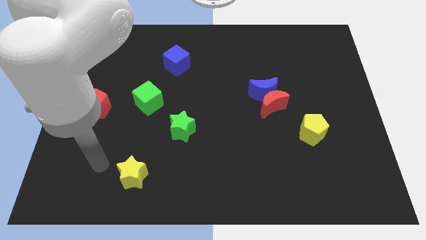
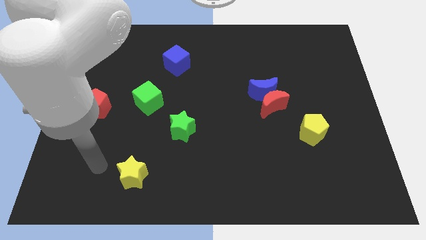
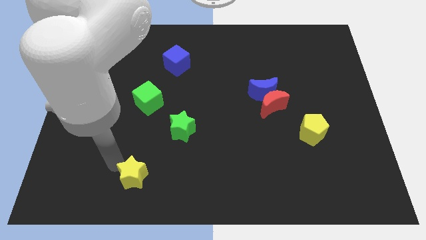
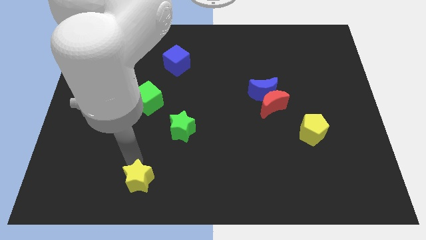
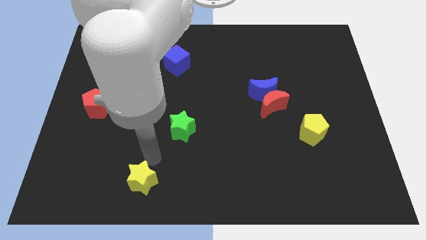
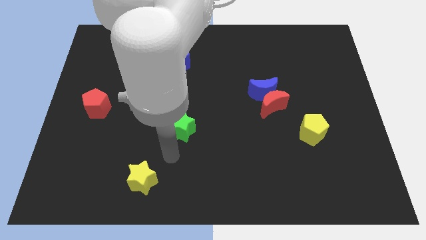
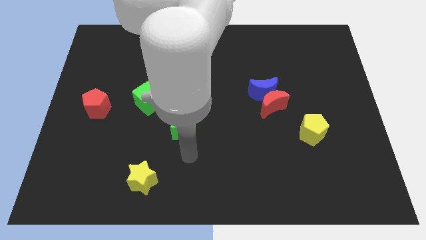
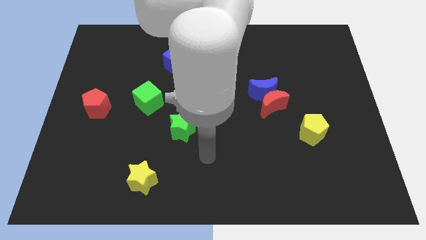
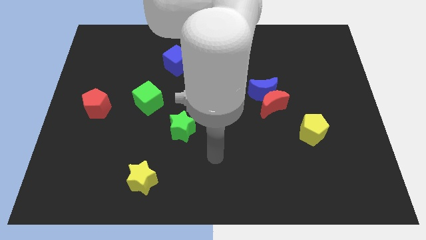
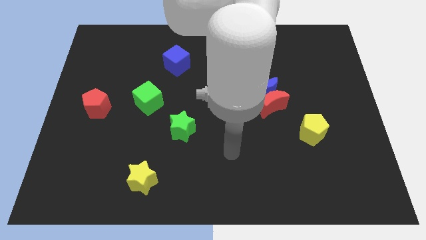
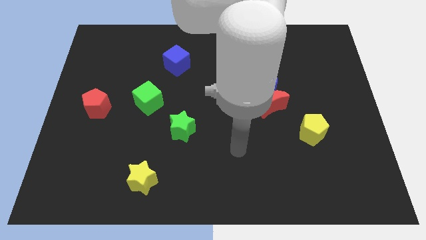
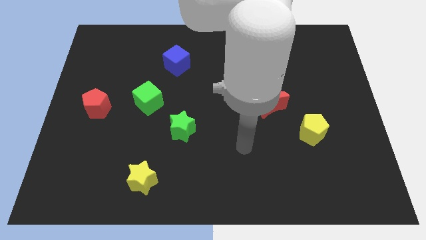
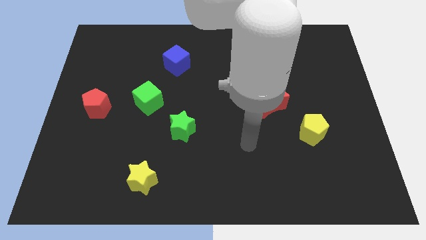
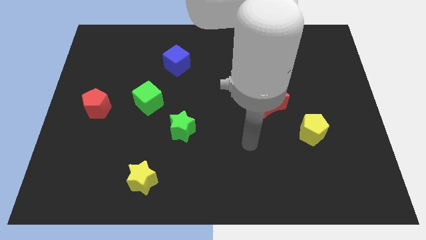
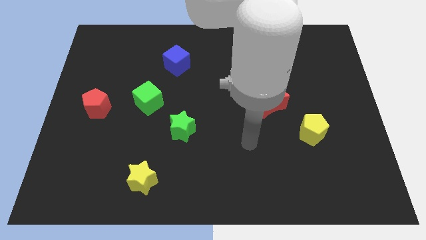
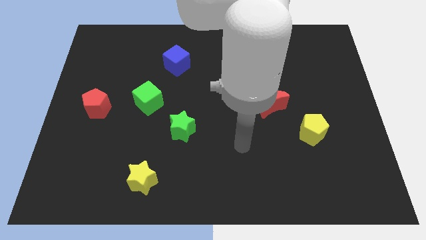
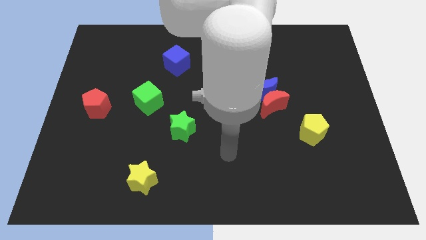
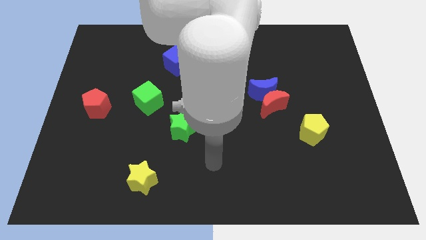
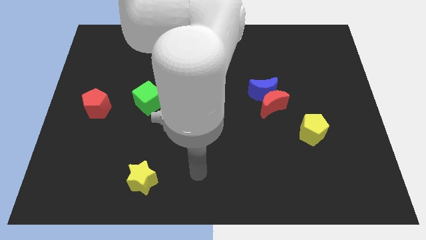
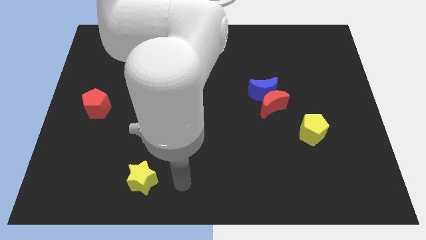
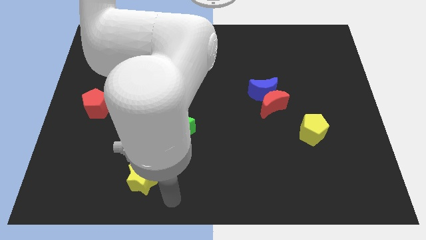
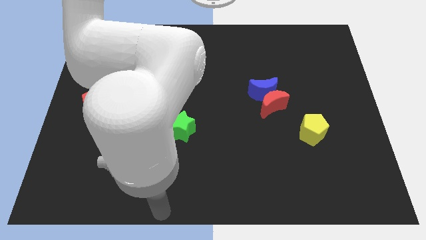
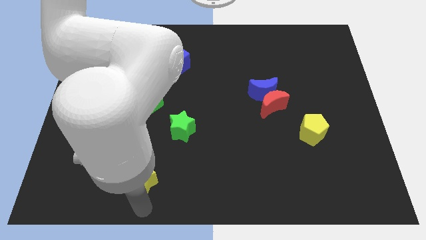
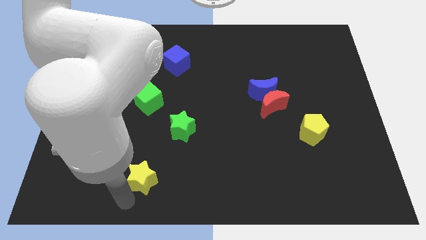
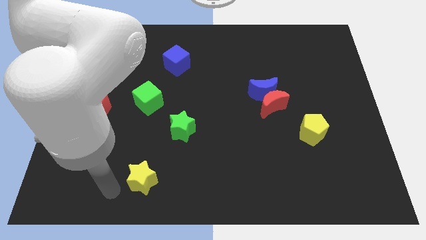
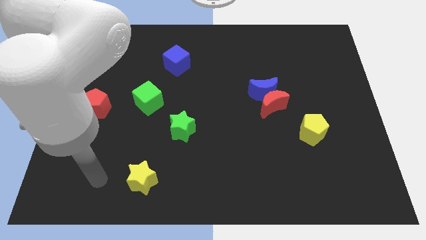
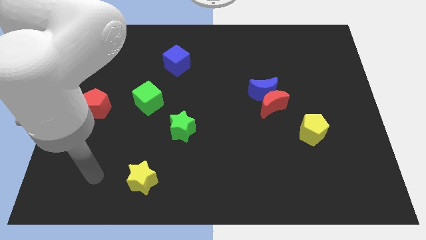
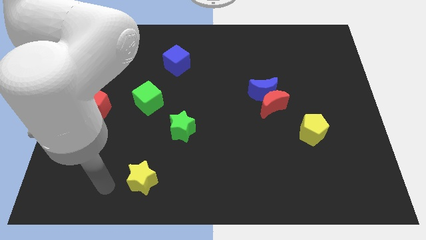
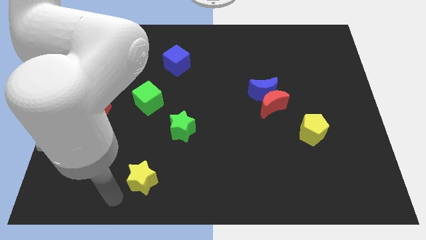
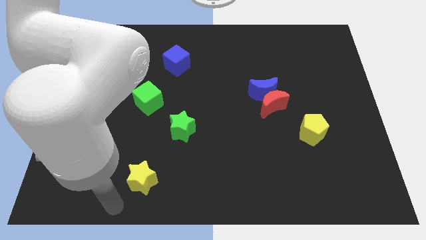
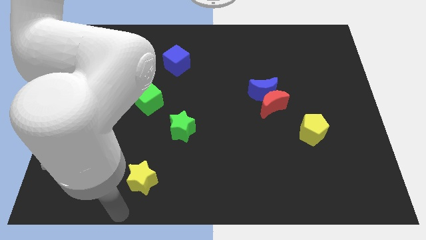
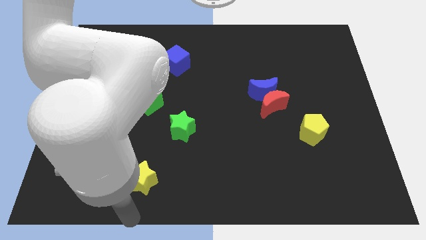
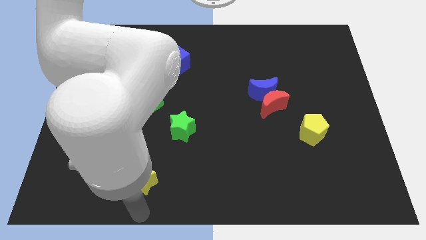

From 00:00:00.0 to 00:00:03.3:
slightly touch the yellow star

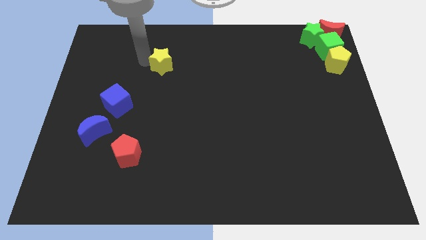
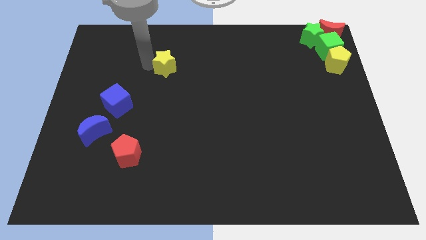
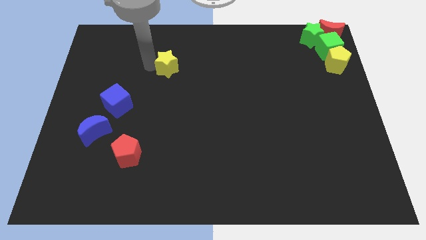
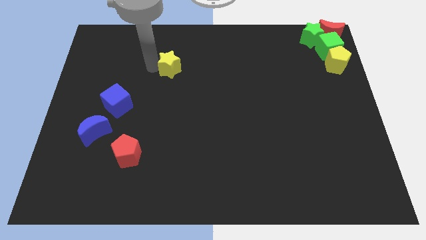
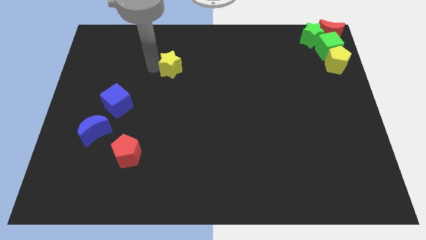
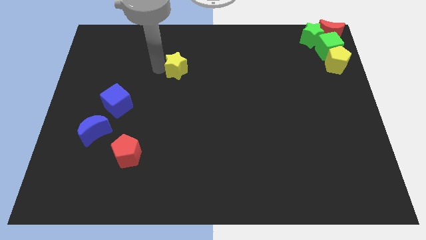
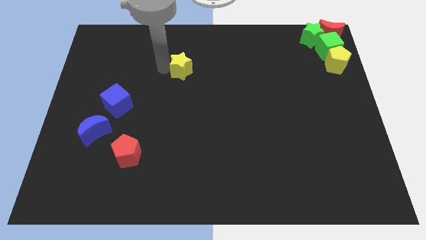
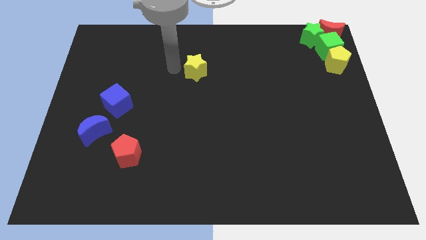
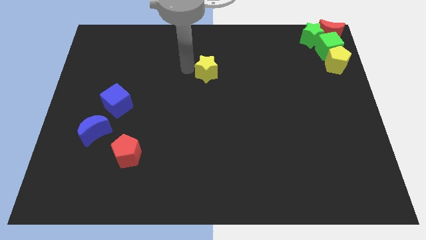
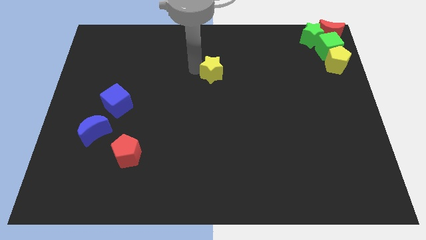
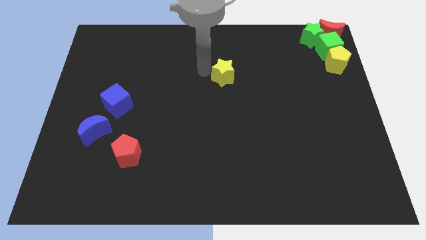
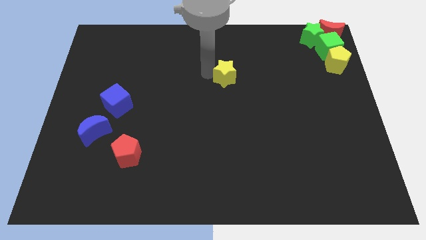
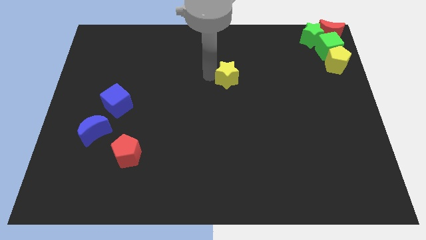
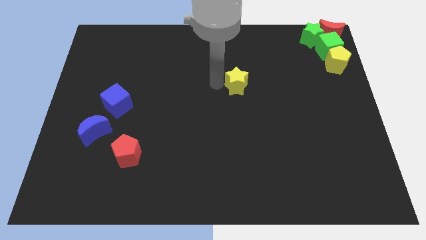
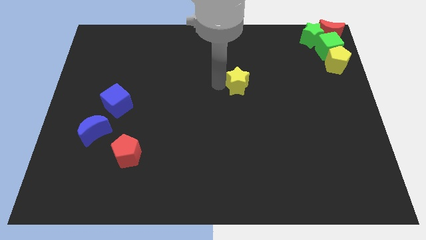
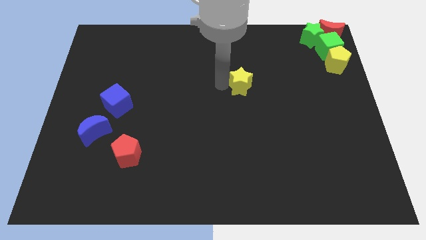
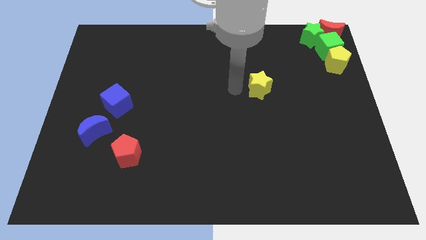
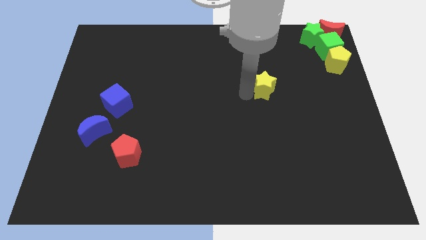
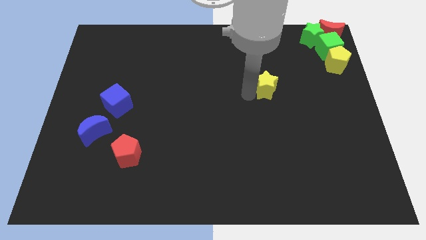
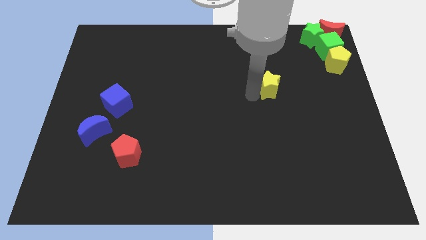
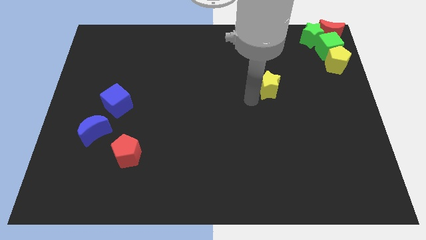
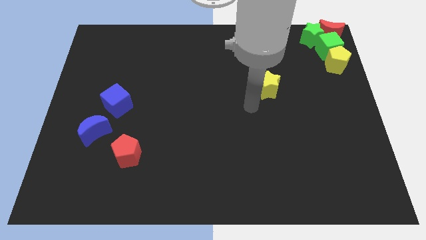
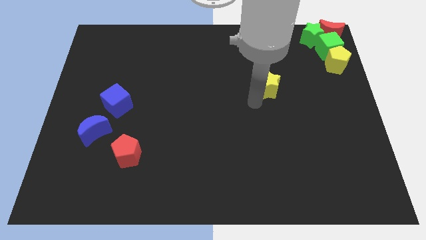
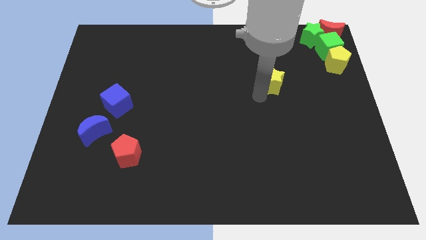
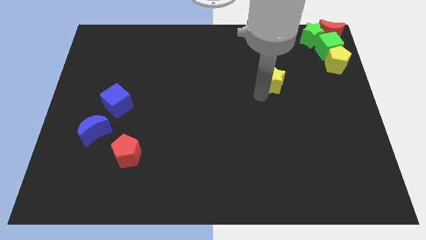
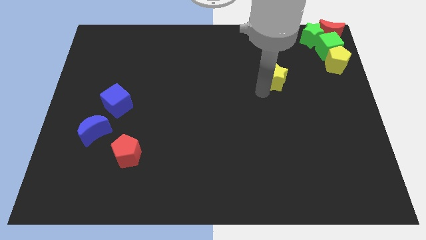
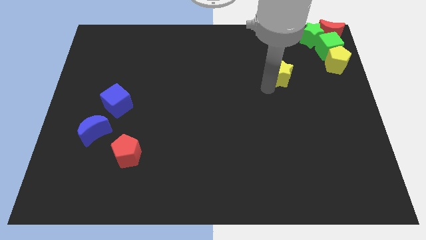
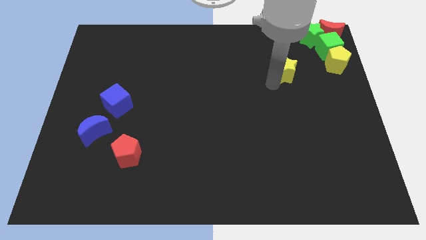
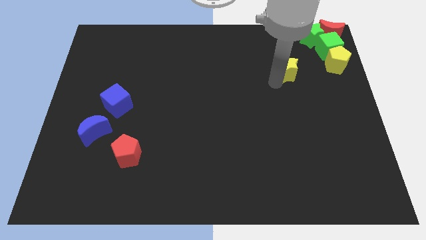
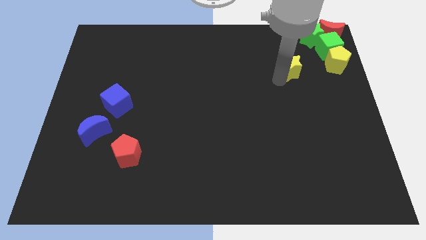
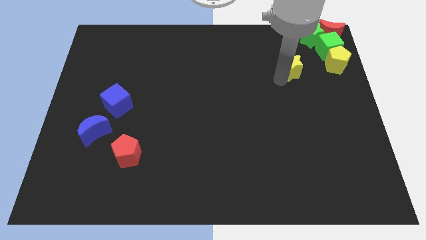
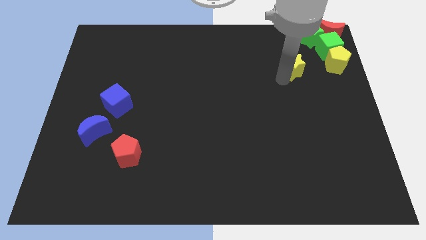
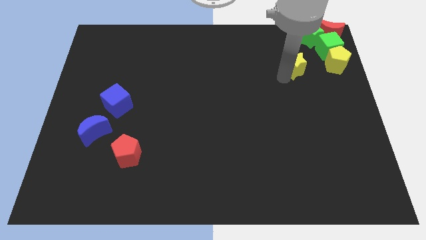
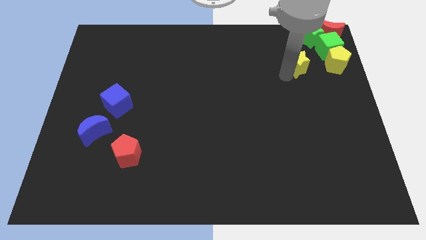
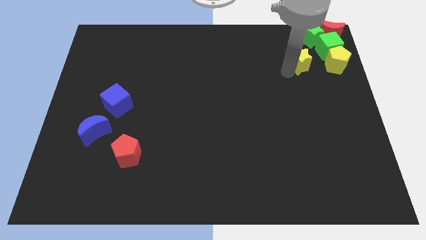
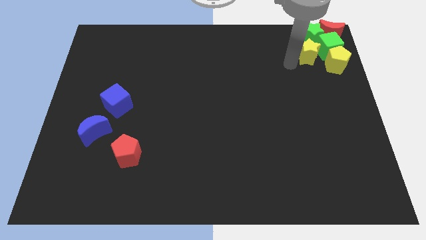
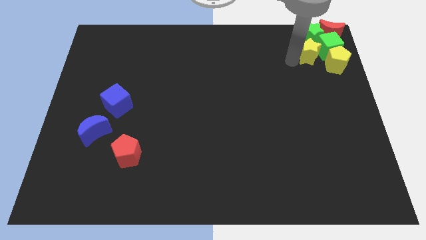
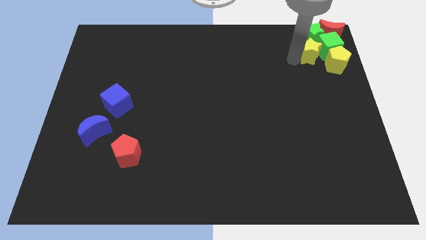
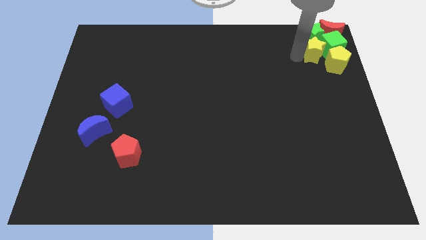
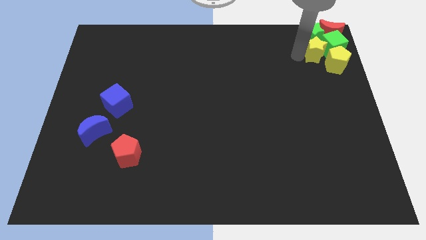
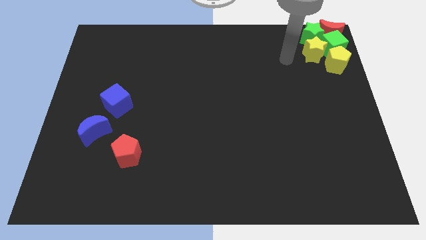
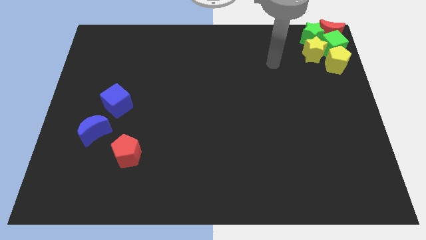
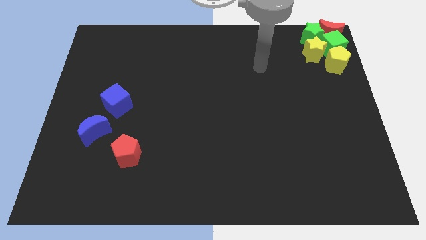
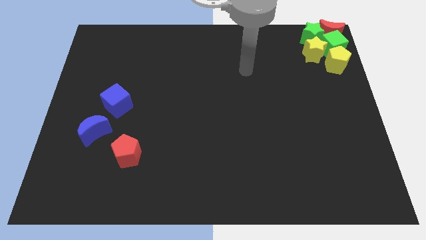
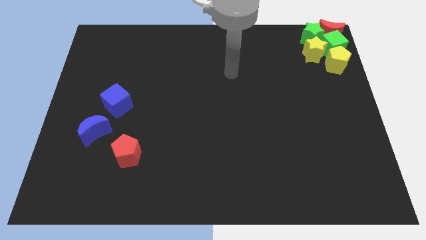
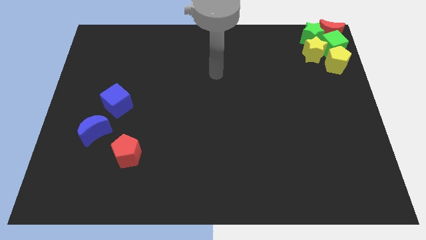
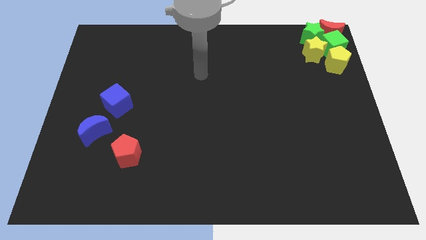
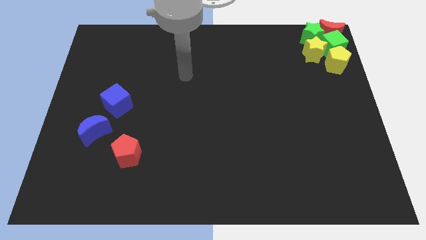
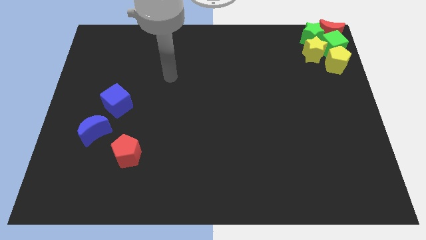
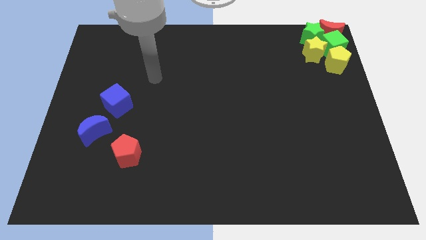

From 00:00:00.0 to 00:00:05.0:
push the yellow star into the green cube

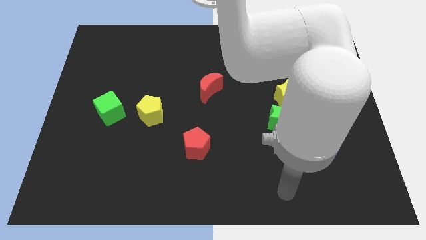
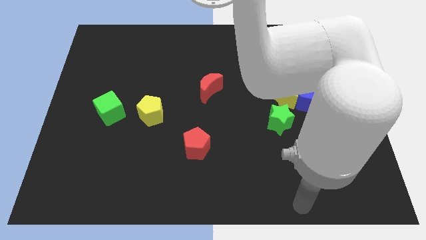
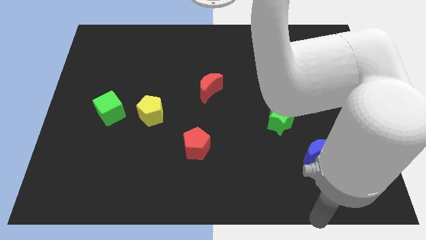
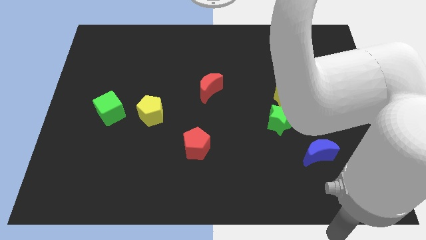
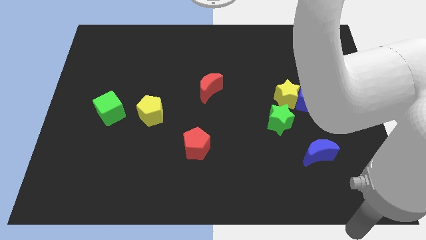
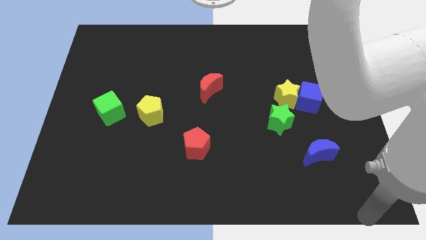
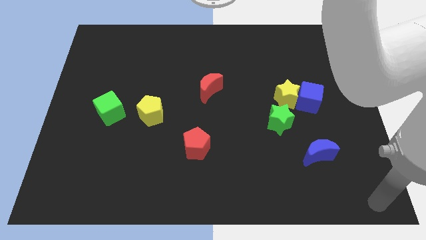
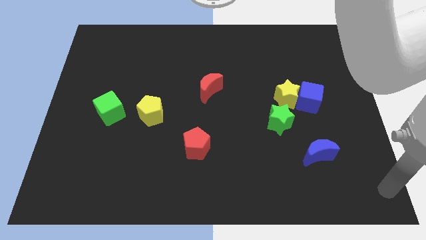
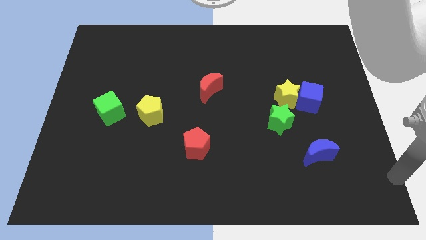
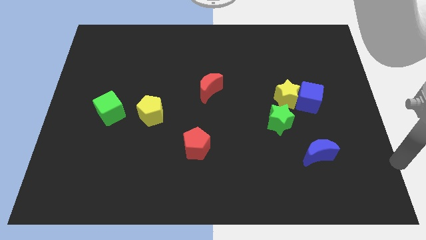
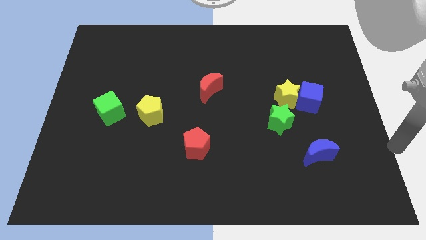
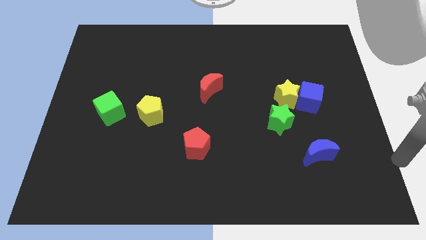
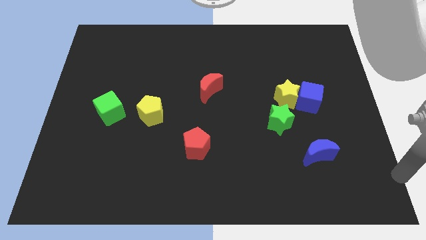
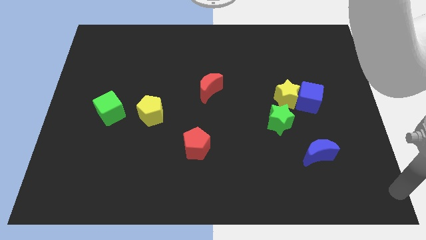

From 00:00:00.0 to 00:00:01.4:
place your arm at the bottom right corner of the board
